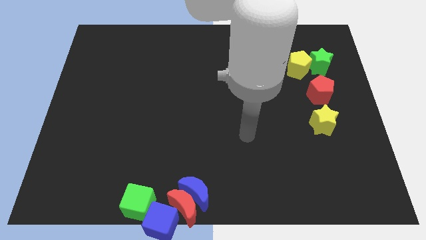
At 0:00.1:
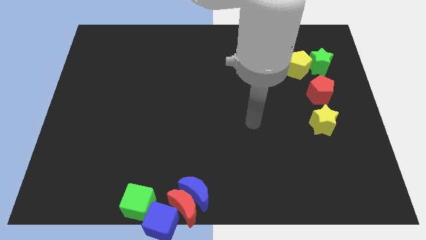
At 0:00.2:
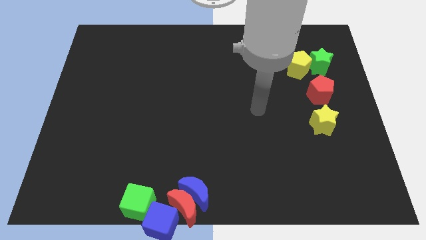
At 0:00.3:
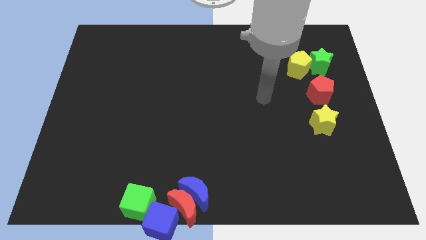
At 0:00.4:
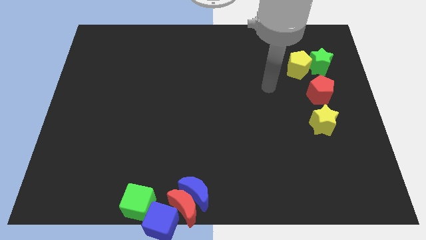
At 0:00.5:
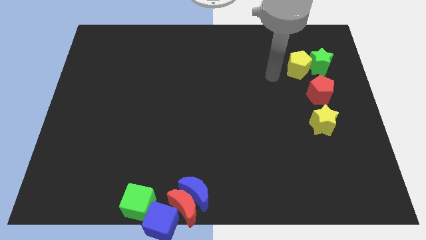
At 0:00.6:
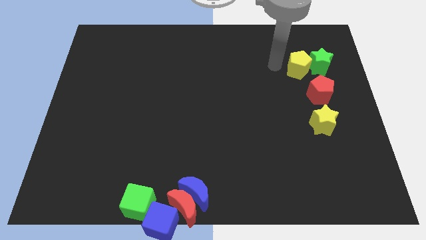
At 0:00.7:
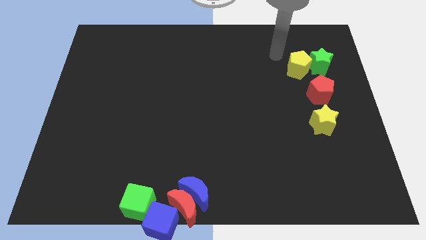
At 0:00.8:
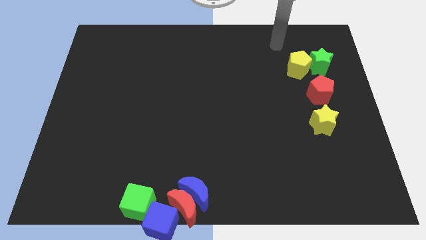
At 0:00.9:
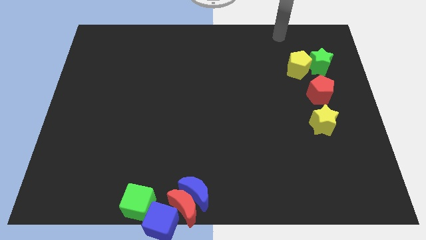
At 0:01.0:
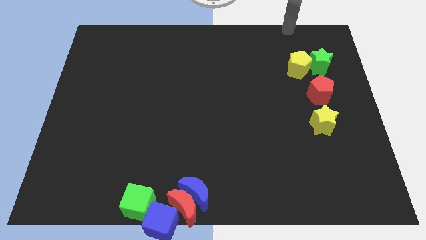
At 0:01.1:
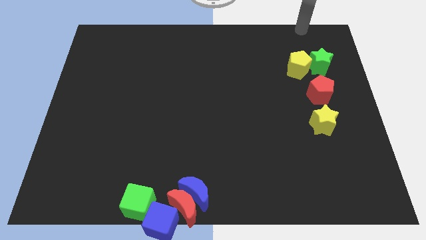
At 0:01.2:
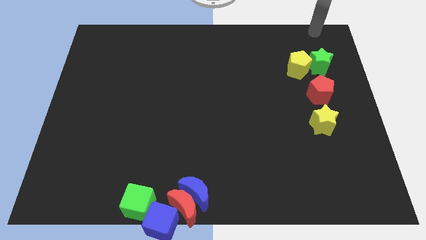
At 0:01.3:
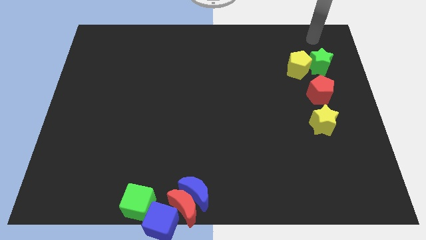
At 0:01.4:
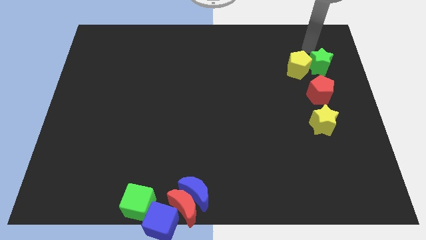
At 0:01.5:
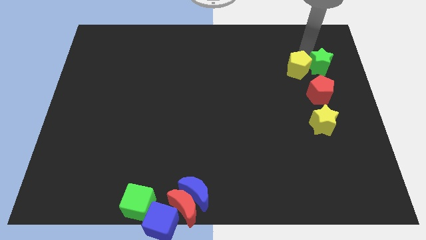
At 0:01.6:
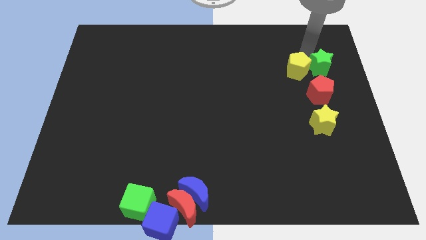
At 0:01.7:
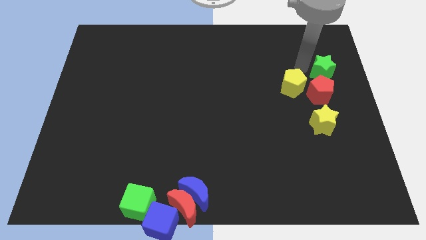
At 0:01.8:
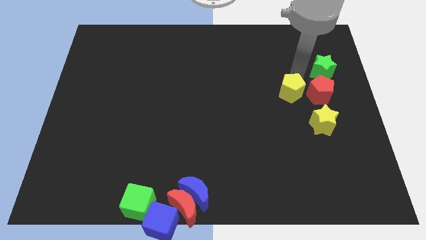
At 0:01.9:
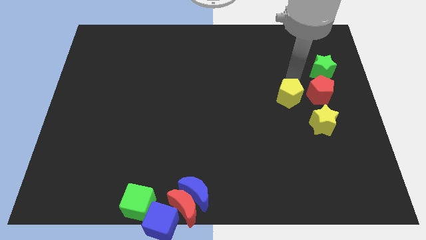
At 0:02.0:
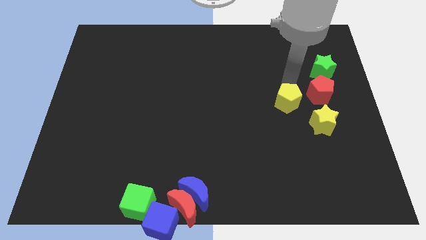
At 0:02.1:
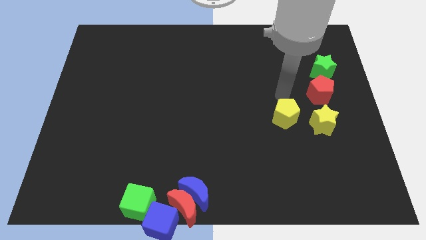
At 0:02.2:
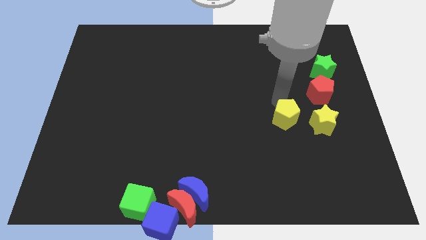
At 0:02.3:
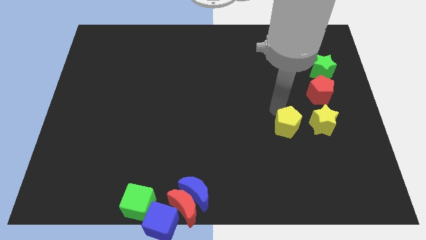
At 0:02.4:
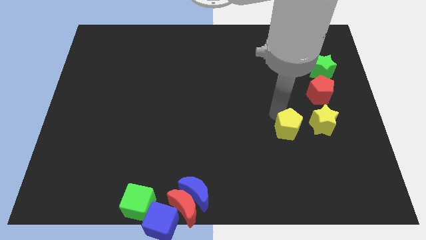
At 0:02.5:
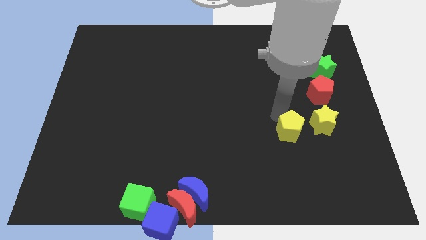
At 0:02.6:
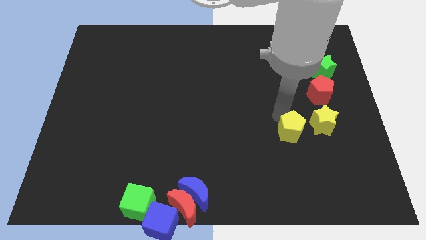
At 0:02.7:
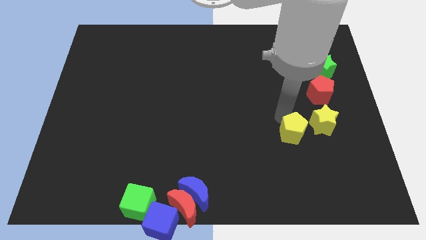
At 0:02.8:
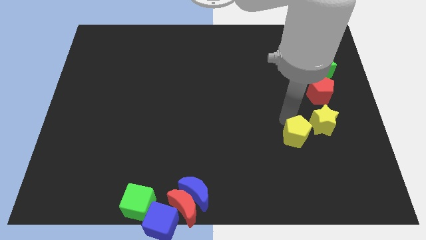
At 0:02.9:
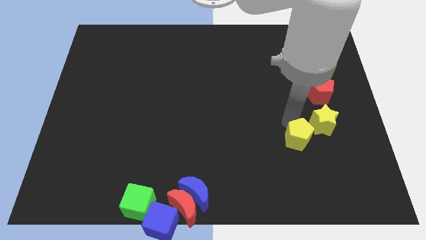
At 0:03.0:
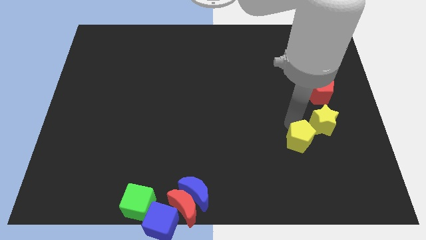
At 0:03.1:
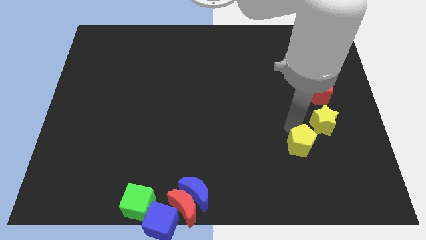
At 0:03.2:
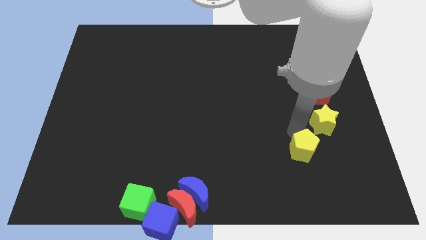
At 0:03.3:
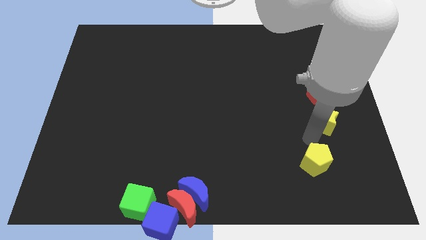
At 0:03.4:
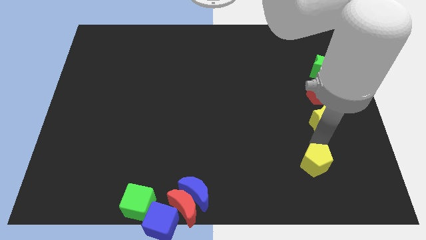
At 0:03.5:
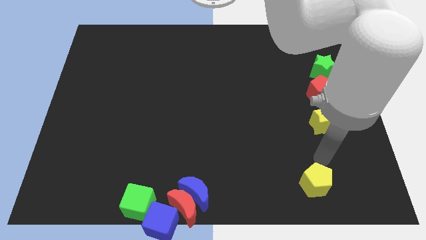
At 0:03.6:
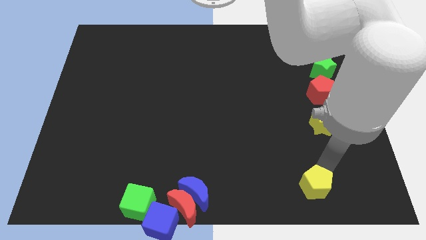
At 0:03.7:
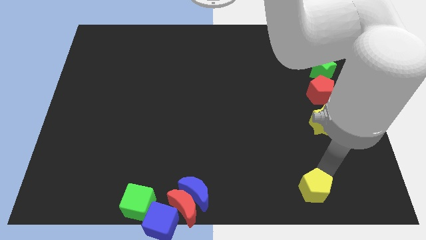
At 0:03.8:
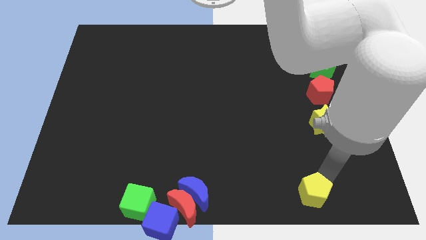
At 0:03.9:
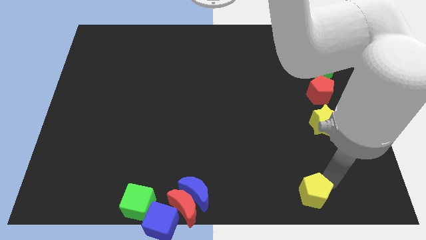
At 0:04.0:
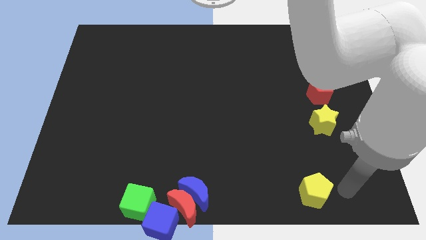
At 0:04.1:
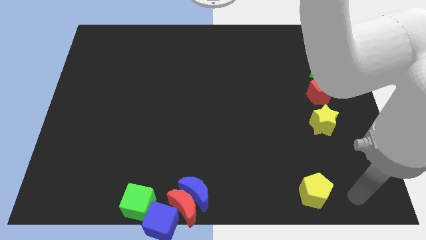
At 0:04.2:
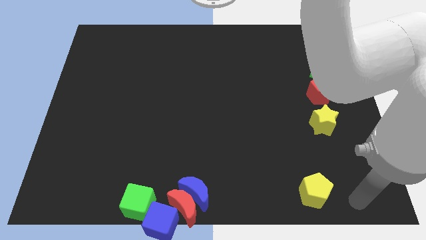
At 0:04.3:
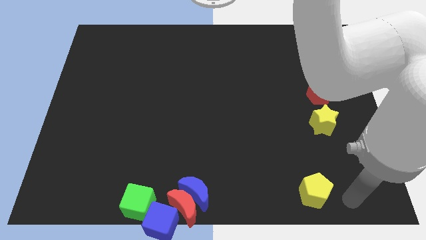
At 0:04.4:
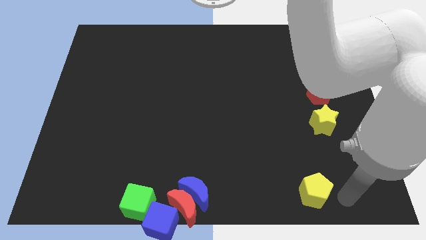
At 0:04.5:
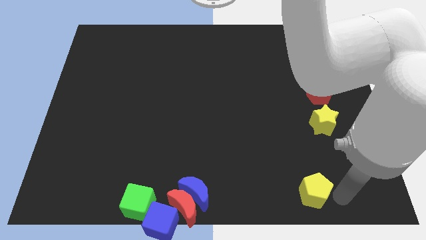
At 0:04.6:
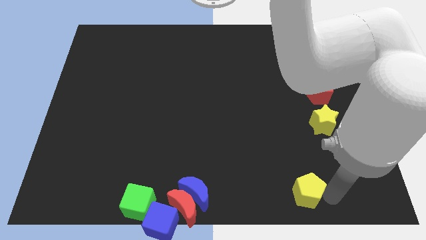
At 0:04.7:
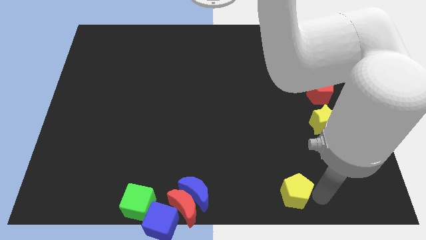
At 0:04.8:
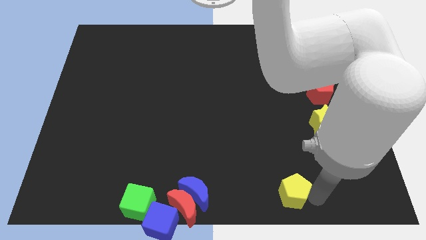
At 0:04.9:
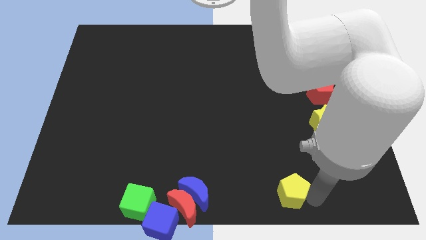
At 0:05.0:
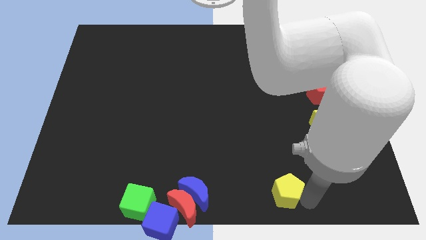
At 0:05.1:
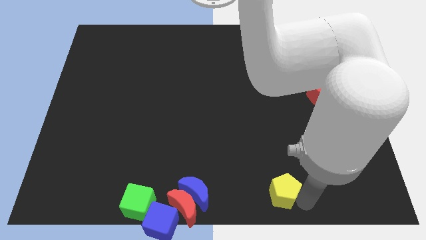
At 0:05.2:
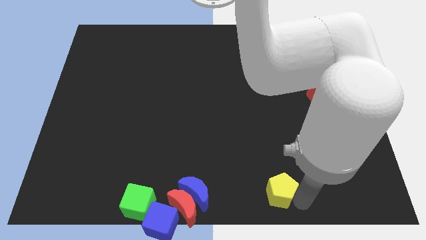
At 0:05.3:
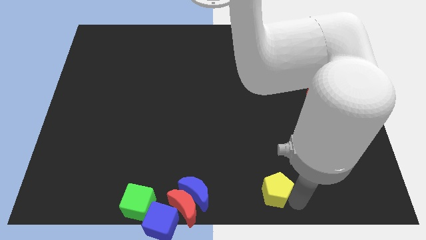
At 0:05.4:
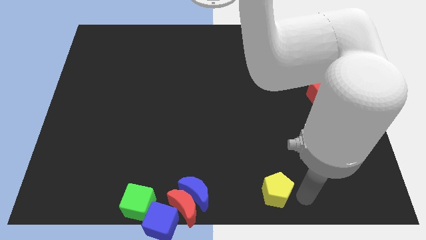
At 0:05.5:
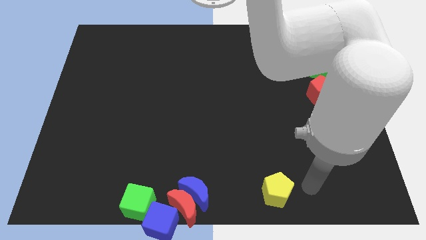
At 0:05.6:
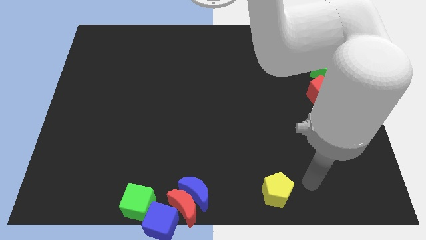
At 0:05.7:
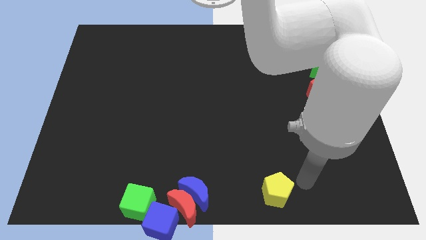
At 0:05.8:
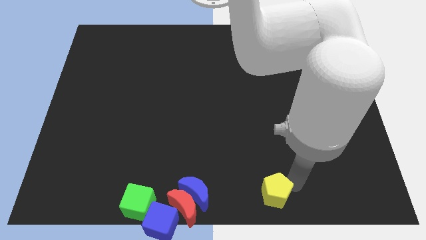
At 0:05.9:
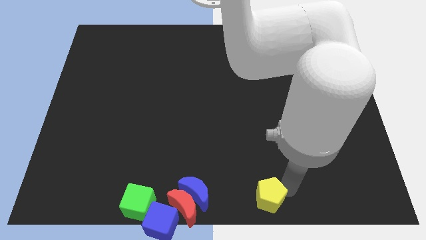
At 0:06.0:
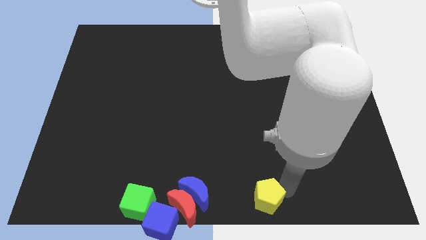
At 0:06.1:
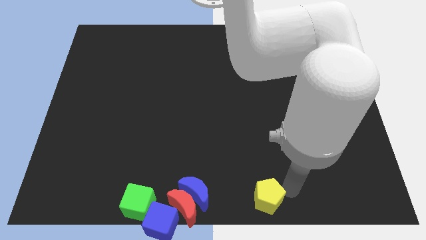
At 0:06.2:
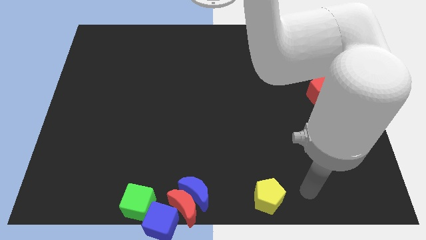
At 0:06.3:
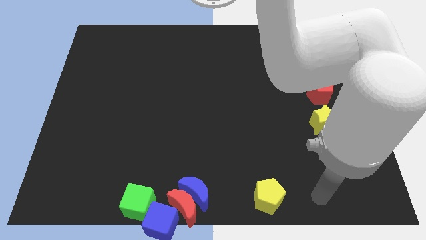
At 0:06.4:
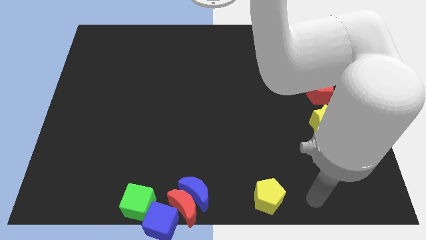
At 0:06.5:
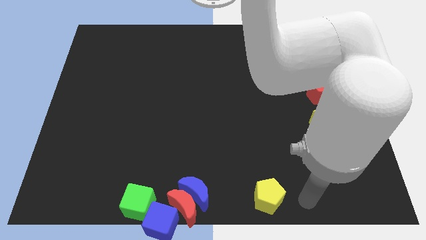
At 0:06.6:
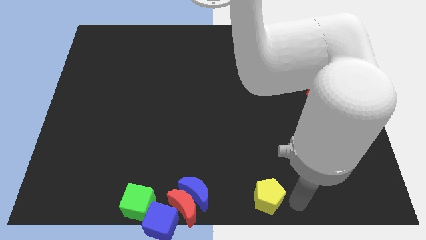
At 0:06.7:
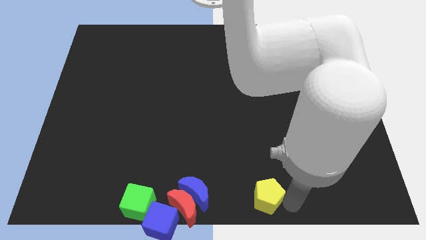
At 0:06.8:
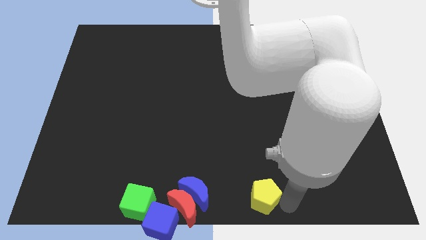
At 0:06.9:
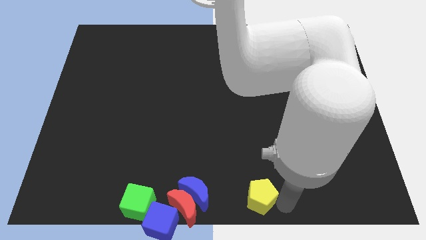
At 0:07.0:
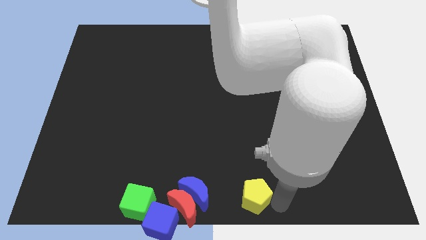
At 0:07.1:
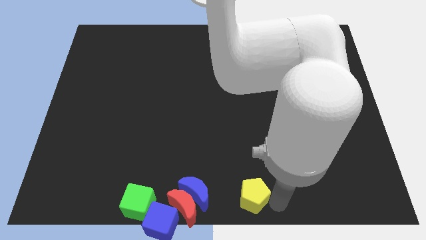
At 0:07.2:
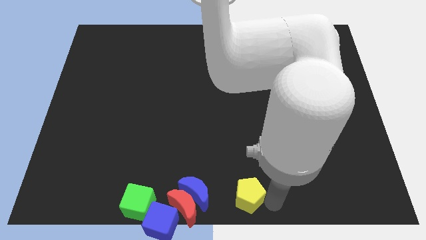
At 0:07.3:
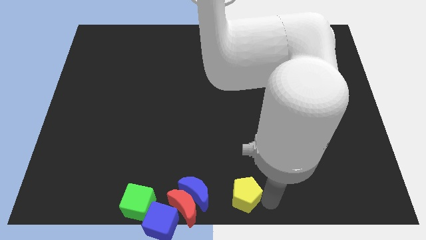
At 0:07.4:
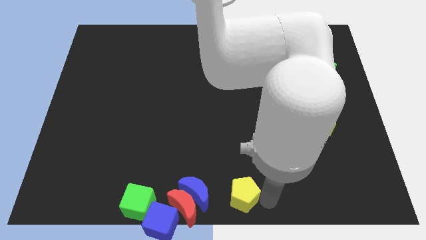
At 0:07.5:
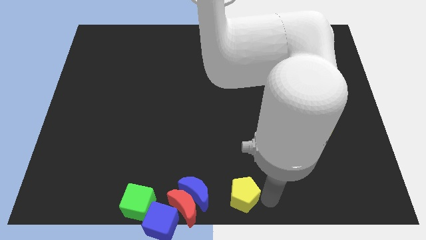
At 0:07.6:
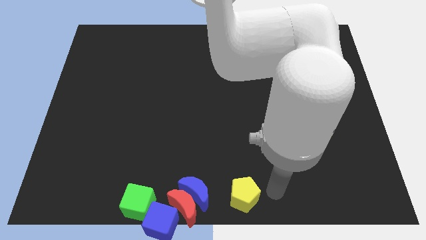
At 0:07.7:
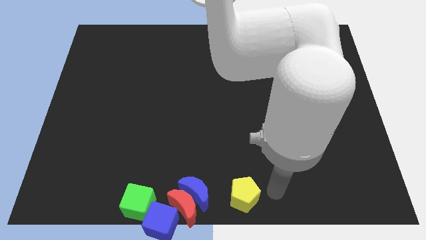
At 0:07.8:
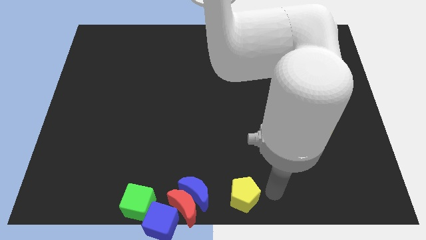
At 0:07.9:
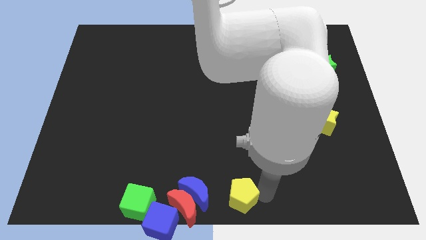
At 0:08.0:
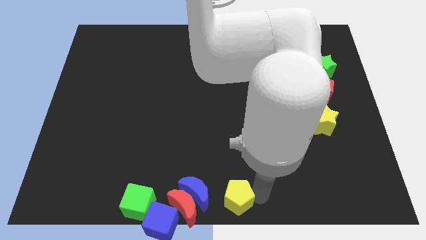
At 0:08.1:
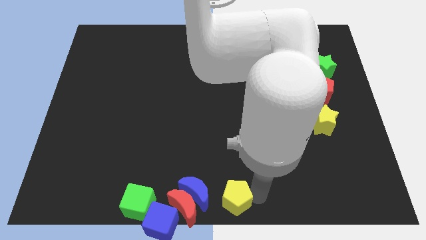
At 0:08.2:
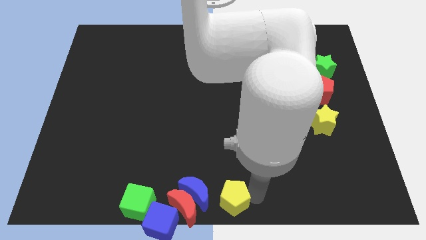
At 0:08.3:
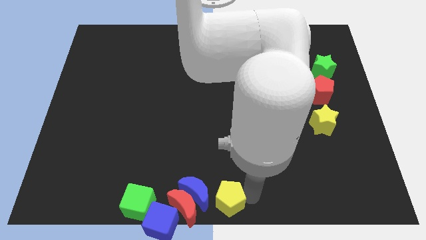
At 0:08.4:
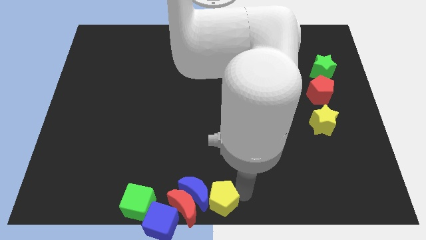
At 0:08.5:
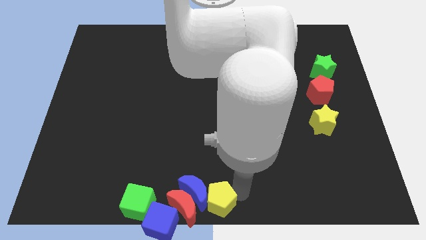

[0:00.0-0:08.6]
move the yellow pentagon into the right side of the blue crescent

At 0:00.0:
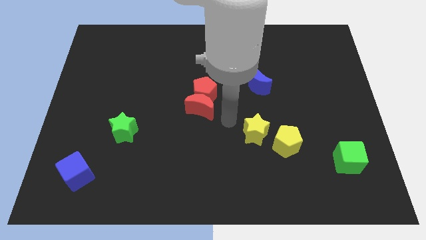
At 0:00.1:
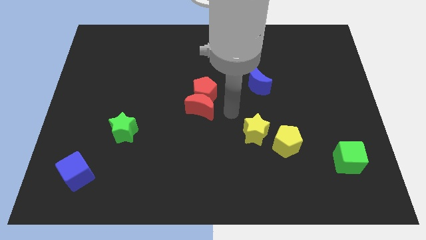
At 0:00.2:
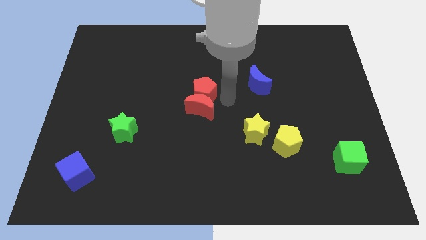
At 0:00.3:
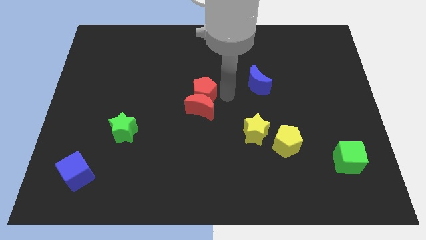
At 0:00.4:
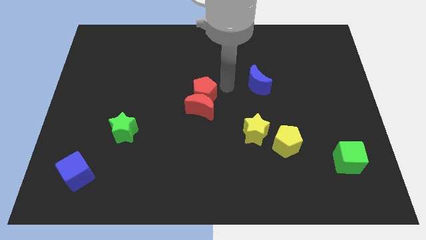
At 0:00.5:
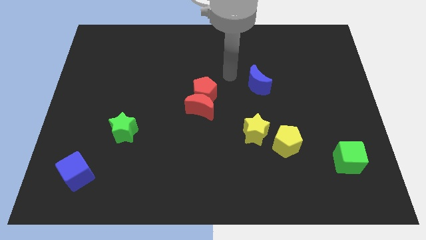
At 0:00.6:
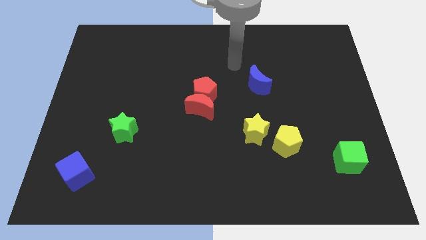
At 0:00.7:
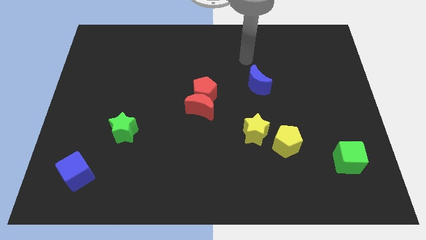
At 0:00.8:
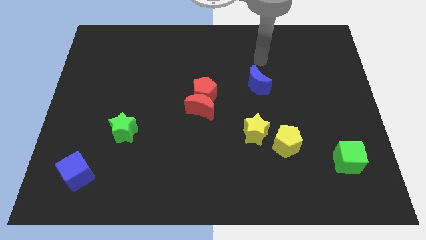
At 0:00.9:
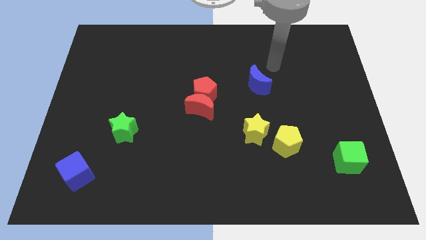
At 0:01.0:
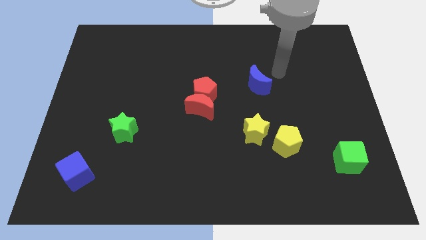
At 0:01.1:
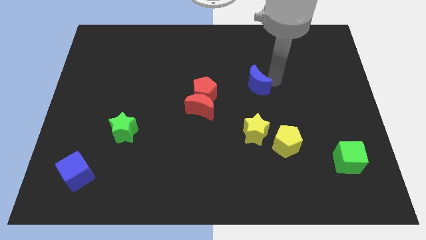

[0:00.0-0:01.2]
move your arm towards the blue crescent
